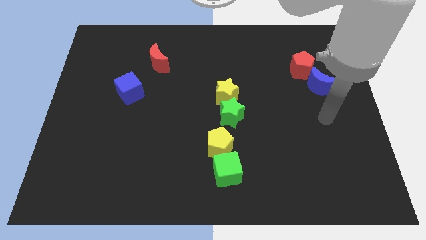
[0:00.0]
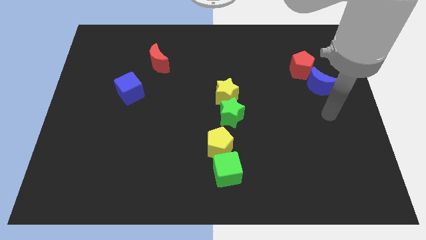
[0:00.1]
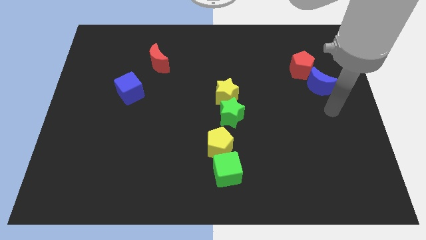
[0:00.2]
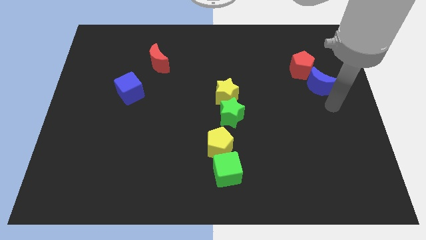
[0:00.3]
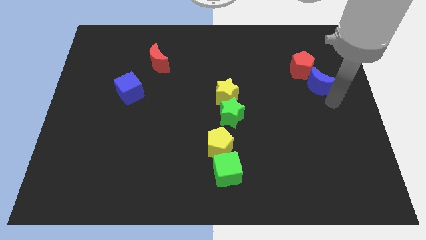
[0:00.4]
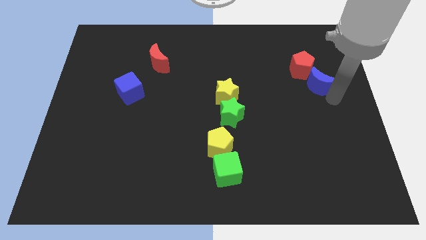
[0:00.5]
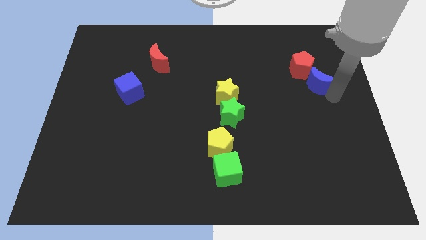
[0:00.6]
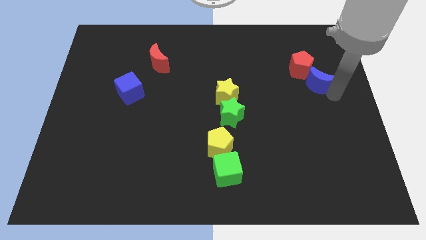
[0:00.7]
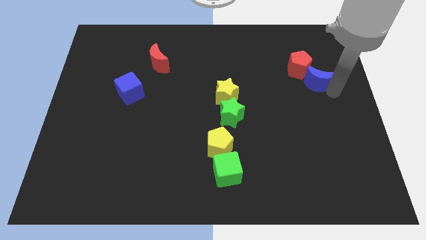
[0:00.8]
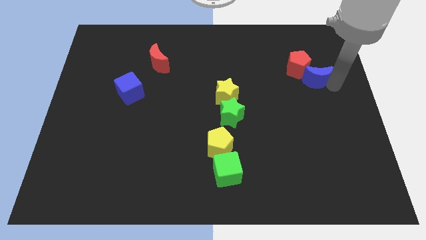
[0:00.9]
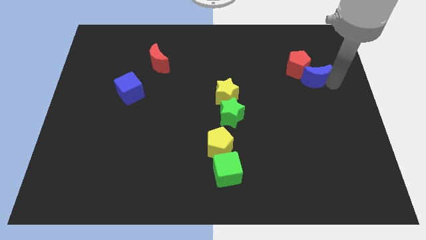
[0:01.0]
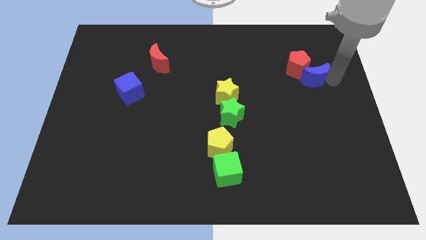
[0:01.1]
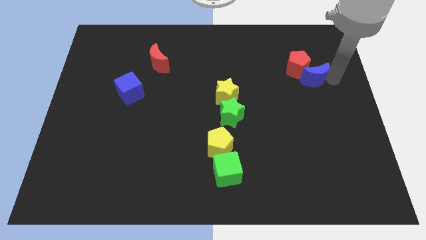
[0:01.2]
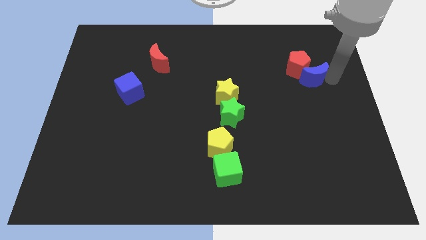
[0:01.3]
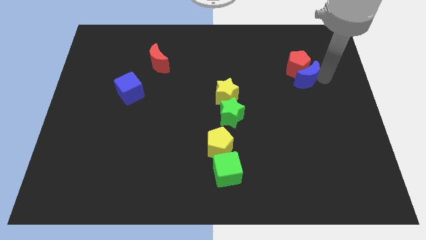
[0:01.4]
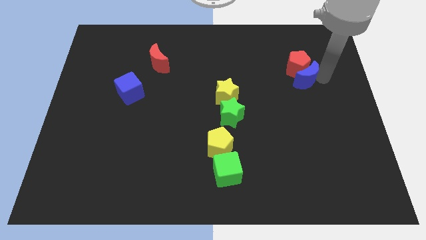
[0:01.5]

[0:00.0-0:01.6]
slide the blue moon into the red pentagon

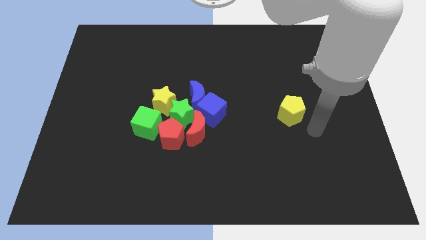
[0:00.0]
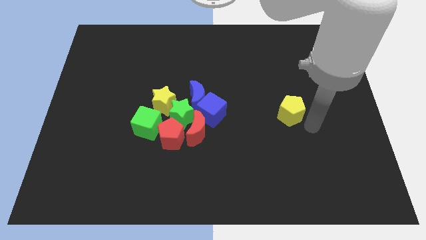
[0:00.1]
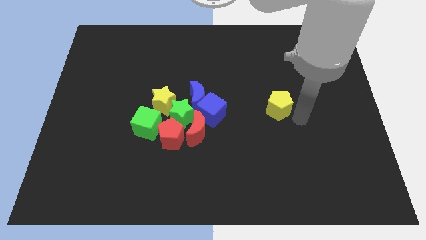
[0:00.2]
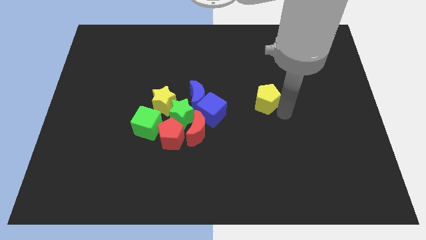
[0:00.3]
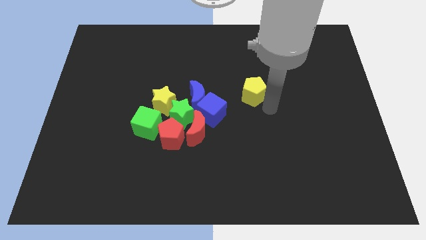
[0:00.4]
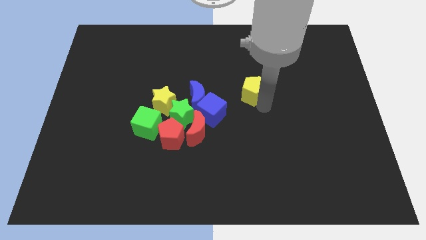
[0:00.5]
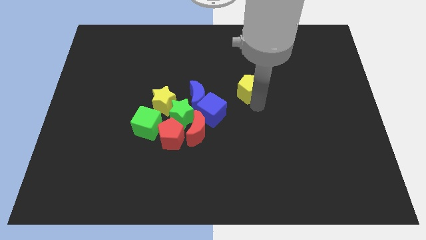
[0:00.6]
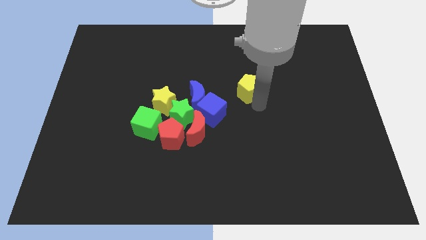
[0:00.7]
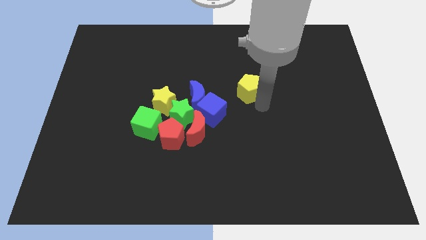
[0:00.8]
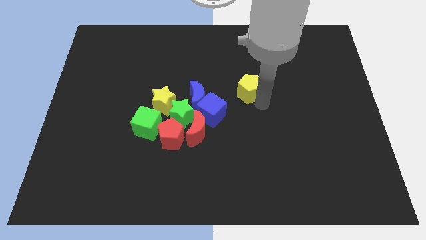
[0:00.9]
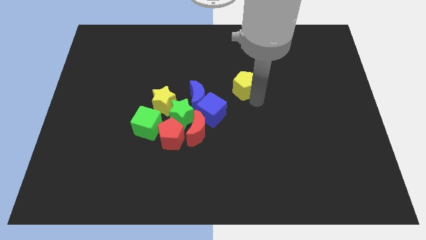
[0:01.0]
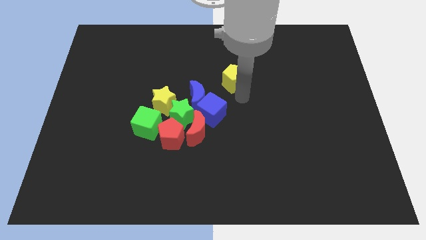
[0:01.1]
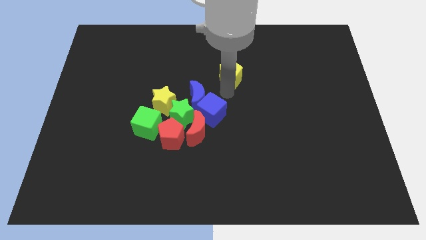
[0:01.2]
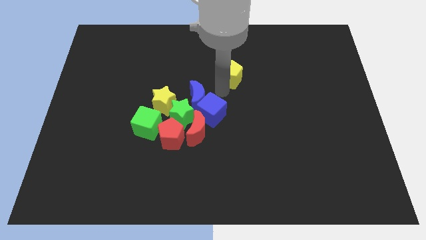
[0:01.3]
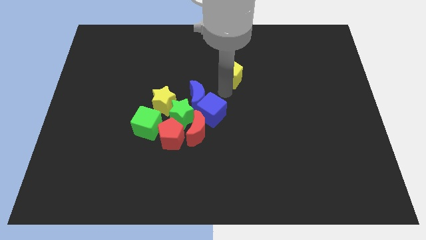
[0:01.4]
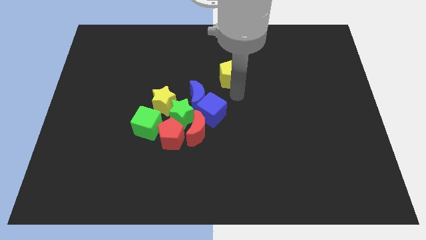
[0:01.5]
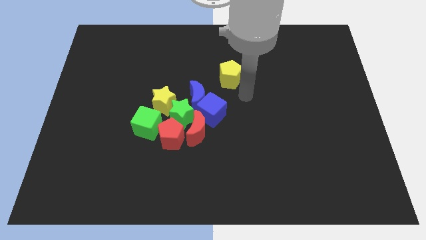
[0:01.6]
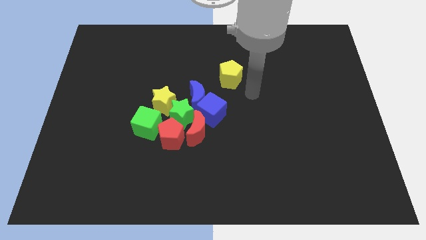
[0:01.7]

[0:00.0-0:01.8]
move yellow pentagon near to blue cube

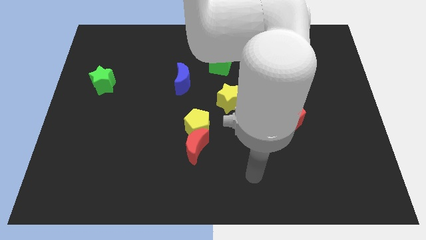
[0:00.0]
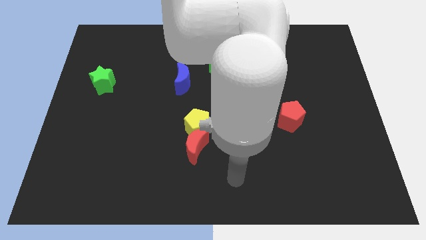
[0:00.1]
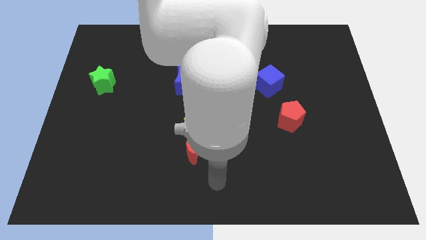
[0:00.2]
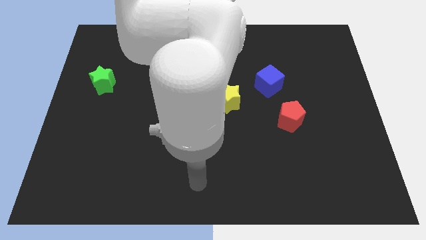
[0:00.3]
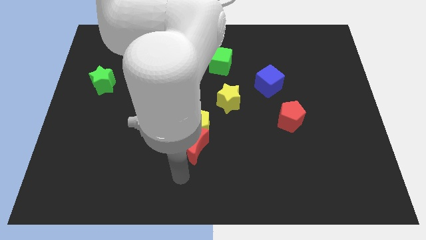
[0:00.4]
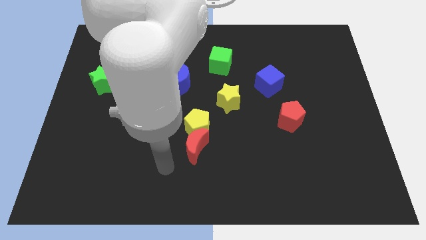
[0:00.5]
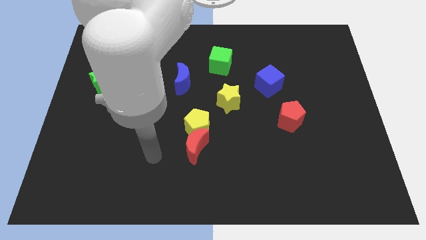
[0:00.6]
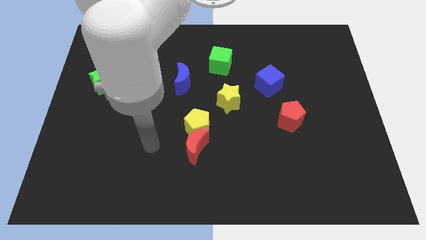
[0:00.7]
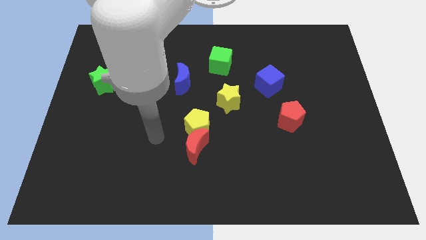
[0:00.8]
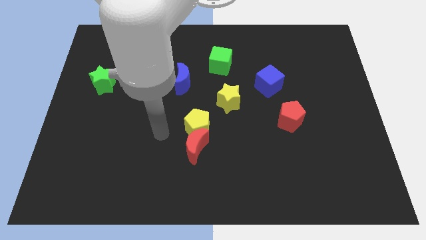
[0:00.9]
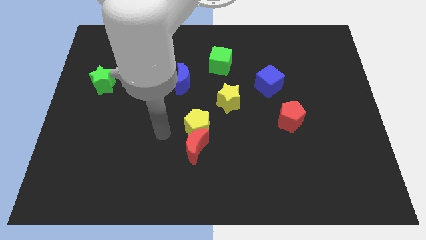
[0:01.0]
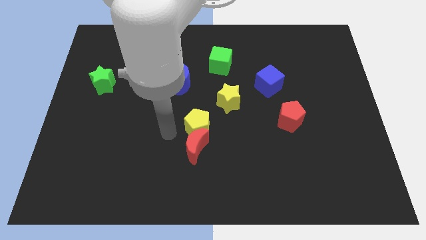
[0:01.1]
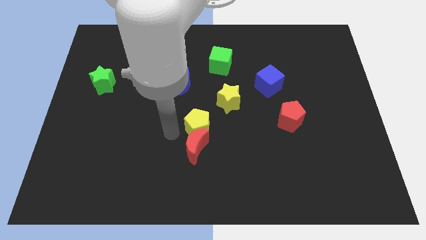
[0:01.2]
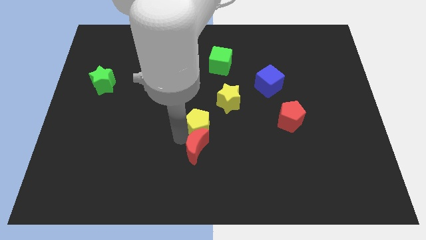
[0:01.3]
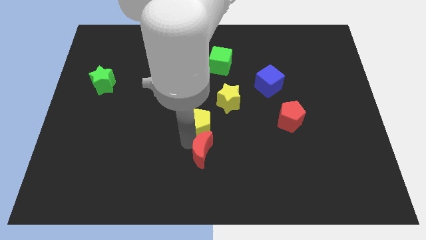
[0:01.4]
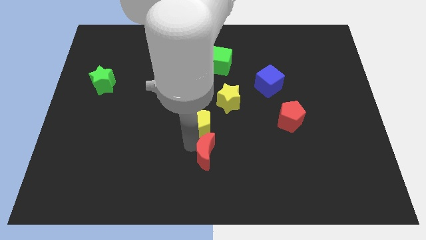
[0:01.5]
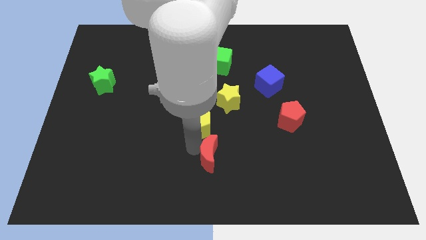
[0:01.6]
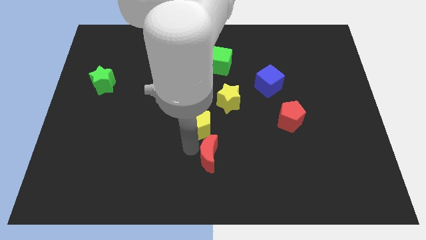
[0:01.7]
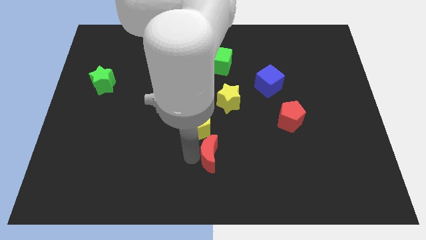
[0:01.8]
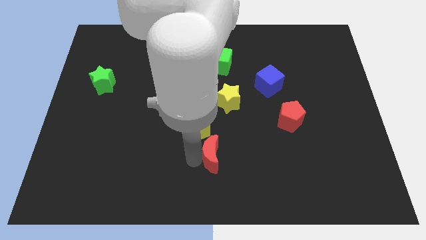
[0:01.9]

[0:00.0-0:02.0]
separate the red moon from the yellow pentagon

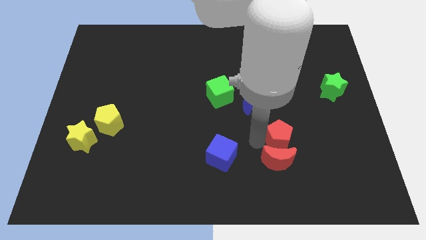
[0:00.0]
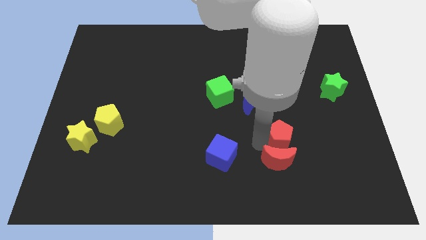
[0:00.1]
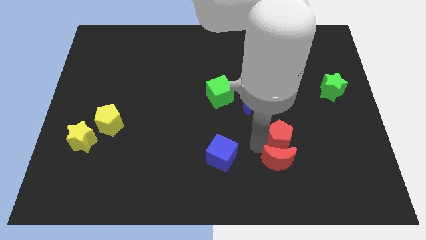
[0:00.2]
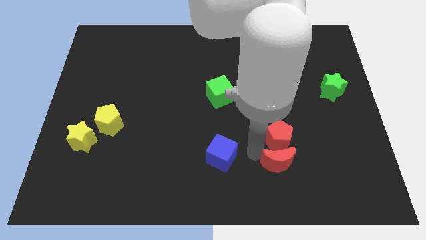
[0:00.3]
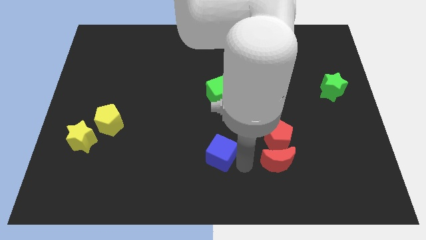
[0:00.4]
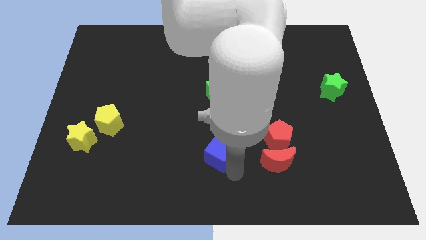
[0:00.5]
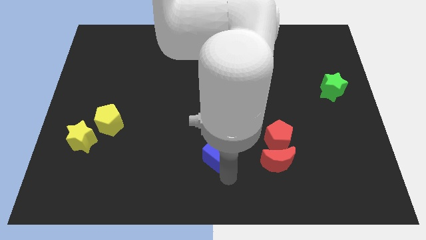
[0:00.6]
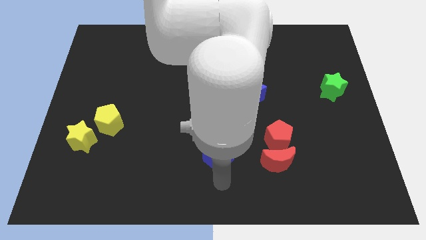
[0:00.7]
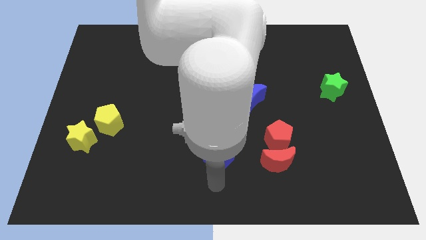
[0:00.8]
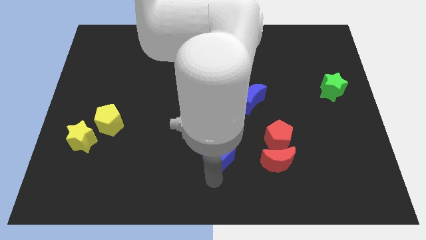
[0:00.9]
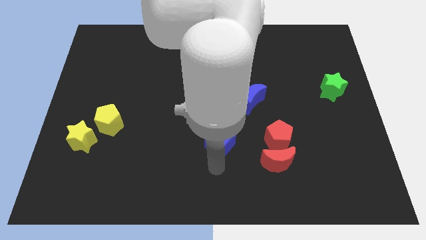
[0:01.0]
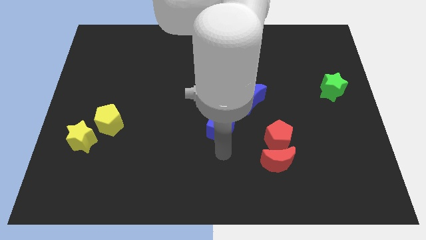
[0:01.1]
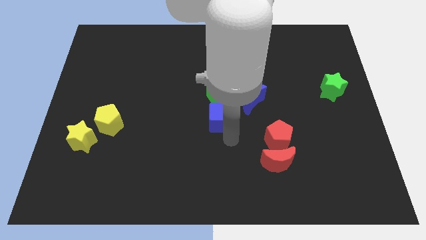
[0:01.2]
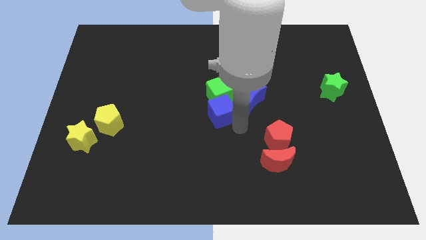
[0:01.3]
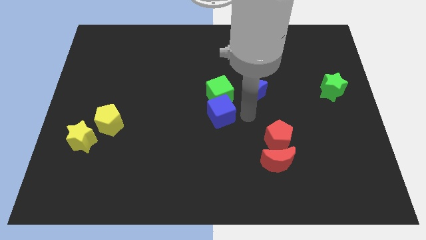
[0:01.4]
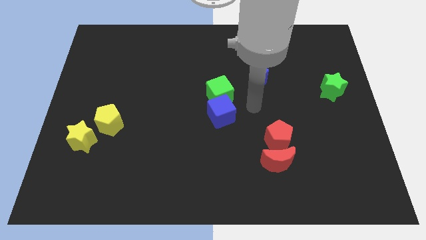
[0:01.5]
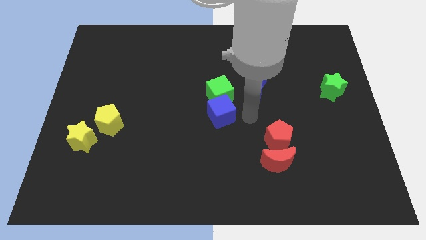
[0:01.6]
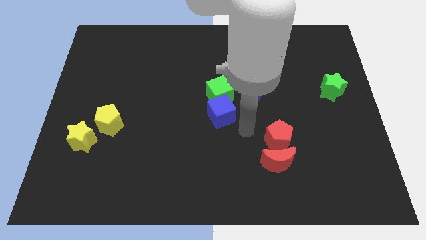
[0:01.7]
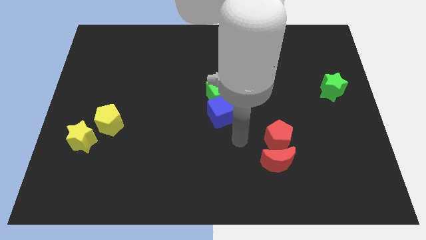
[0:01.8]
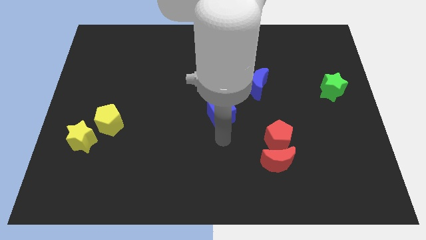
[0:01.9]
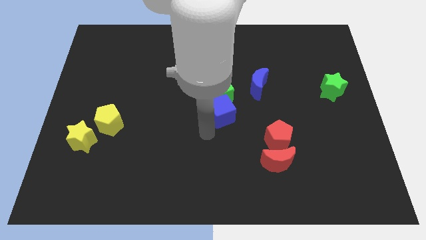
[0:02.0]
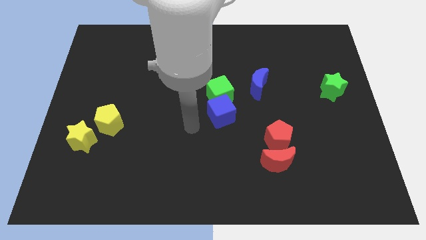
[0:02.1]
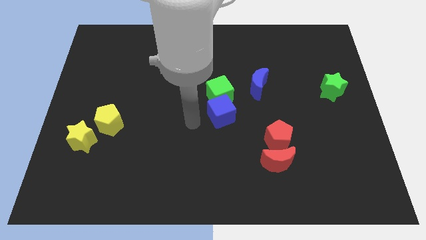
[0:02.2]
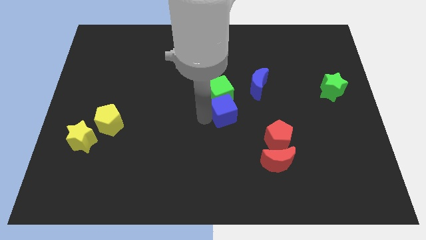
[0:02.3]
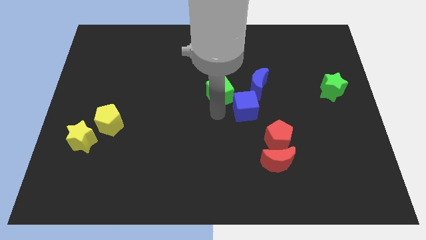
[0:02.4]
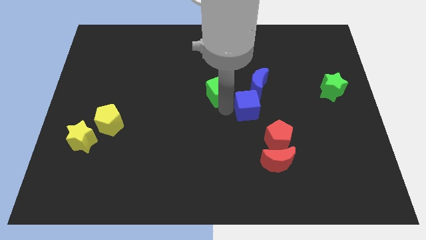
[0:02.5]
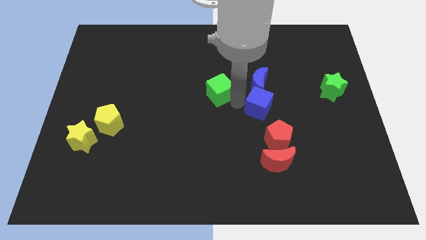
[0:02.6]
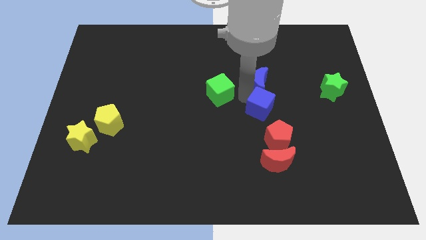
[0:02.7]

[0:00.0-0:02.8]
place blue cube below blue crescent

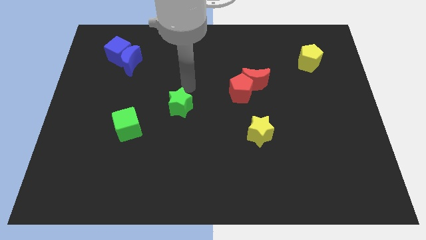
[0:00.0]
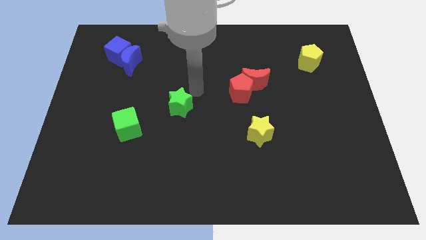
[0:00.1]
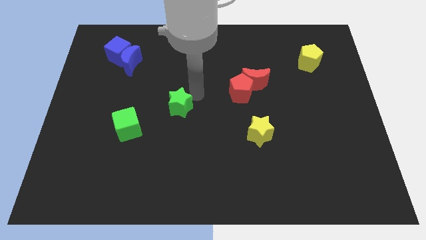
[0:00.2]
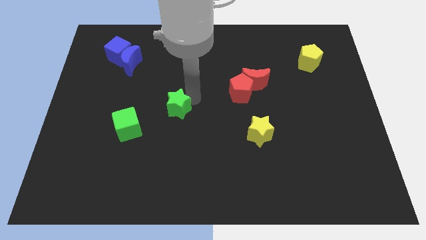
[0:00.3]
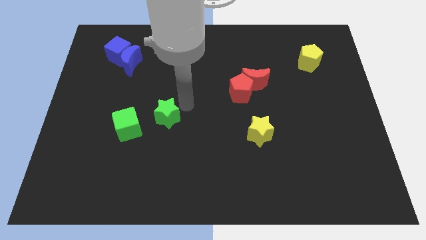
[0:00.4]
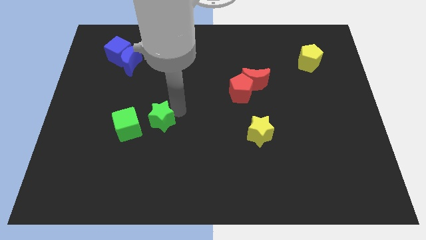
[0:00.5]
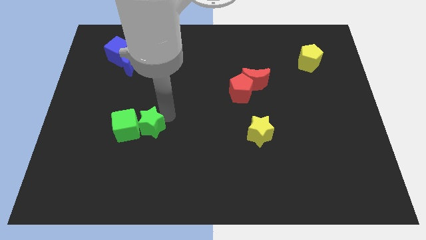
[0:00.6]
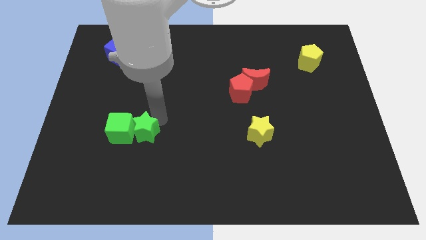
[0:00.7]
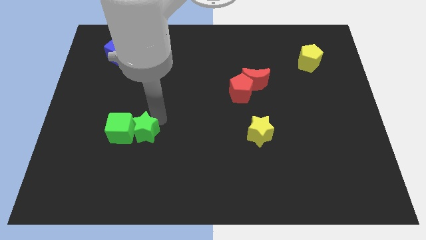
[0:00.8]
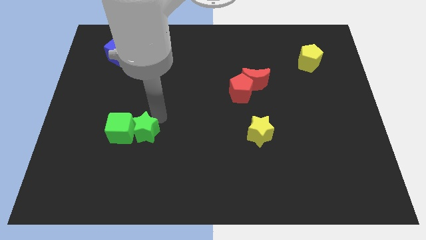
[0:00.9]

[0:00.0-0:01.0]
place green star beside green cube
